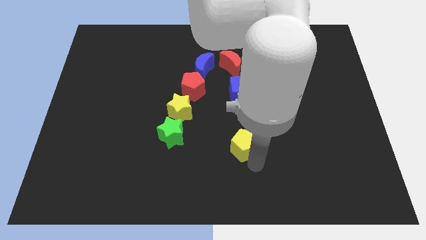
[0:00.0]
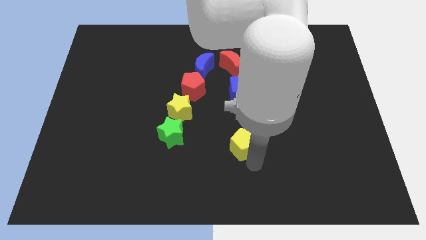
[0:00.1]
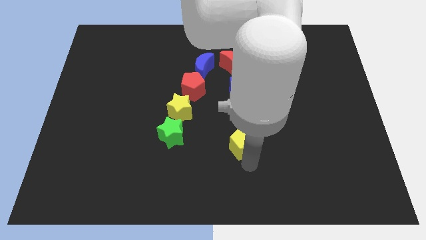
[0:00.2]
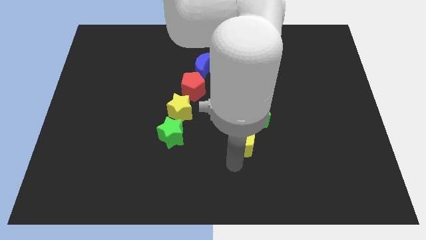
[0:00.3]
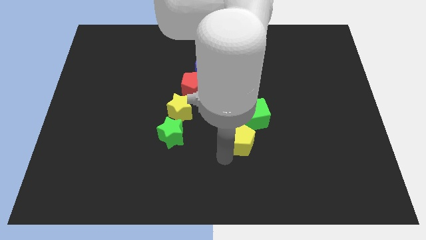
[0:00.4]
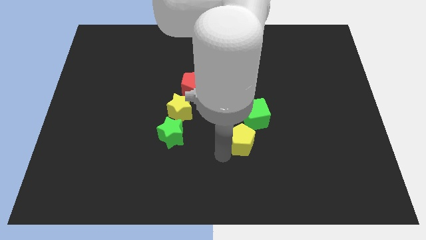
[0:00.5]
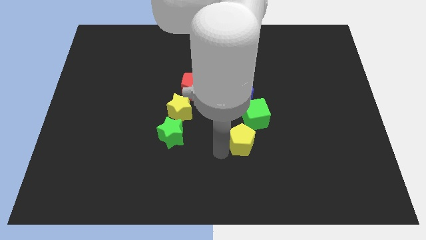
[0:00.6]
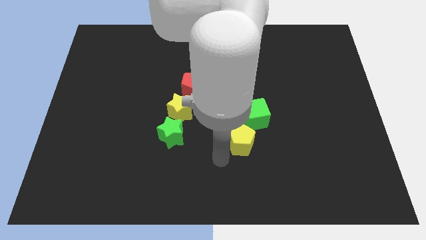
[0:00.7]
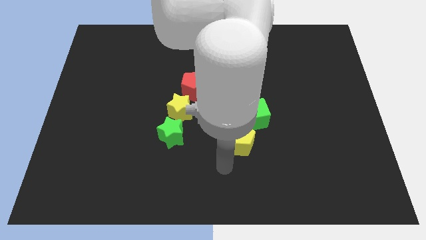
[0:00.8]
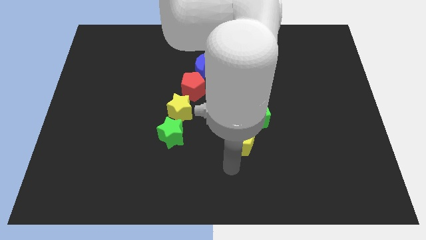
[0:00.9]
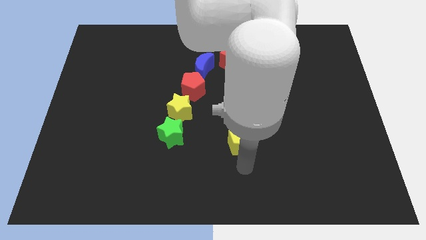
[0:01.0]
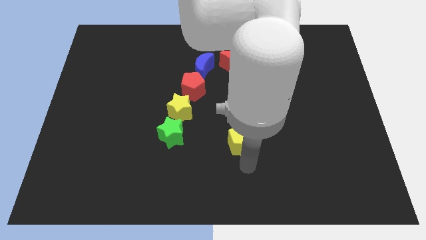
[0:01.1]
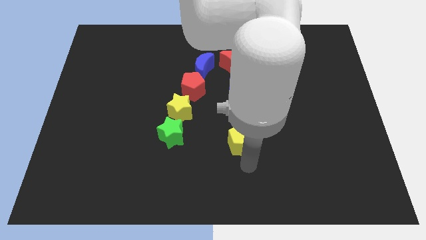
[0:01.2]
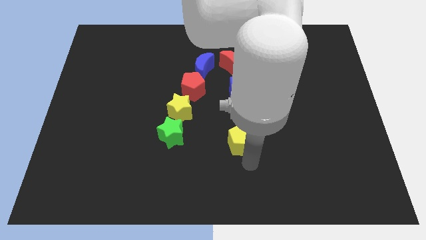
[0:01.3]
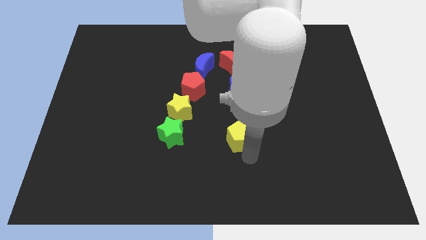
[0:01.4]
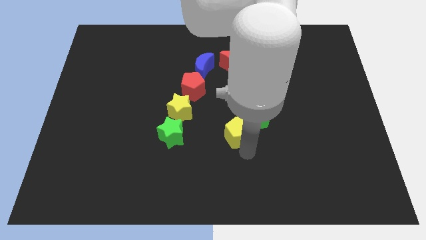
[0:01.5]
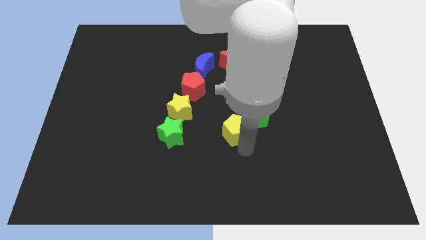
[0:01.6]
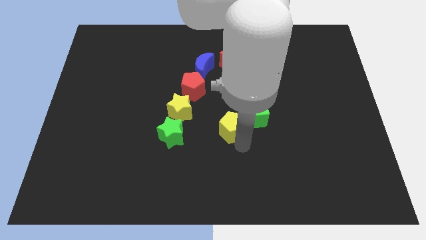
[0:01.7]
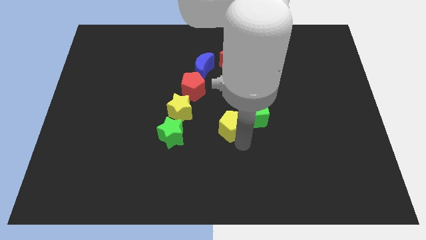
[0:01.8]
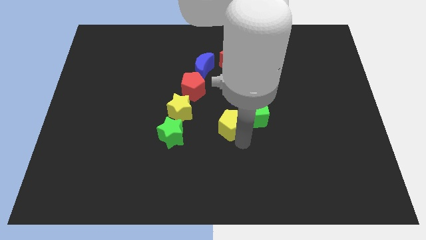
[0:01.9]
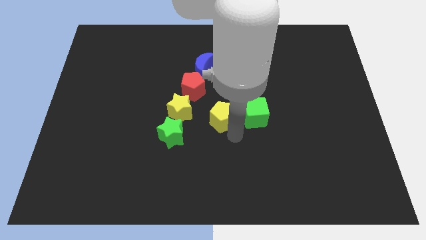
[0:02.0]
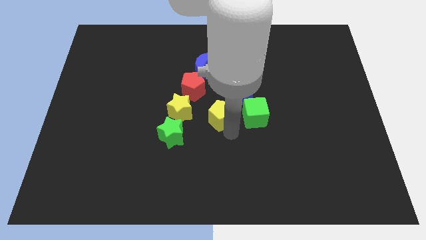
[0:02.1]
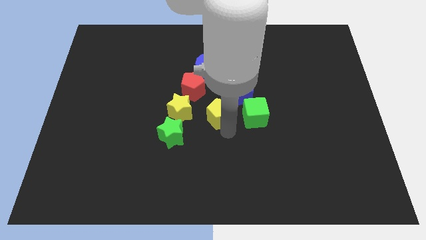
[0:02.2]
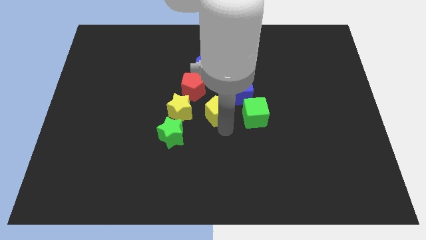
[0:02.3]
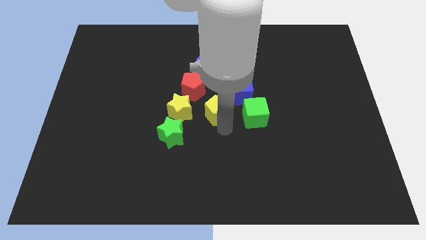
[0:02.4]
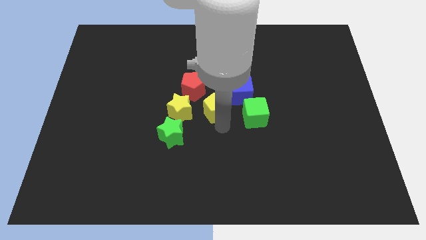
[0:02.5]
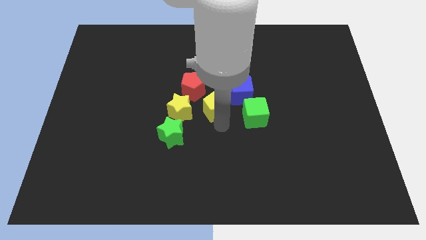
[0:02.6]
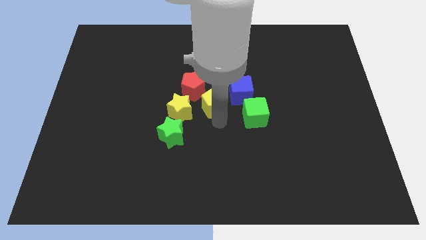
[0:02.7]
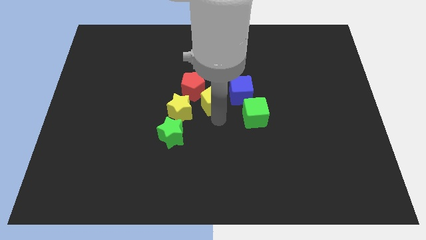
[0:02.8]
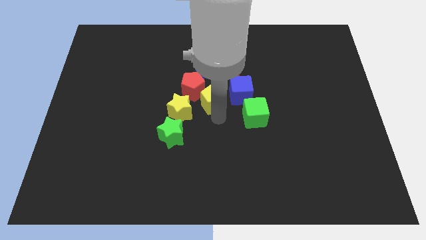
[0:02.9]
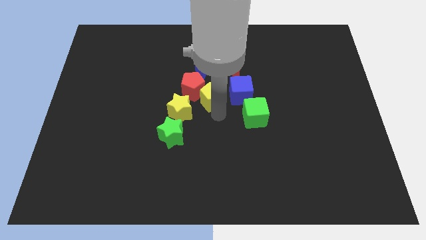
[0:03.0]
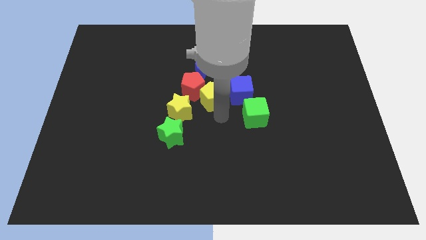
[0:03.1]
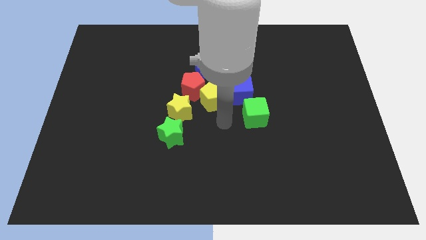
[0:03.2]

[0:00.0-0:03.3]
push the yellow pentagon close to the bottom side of the red pentagon

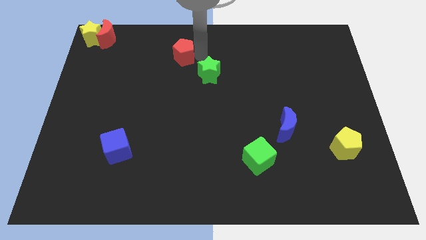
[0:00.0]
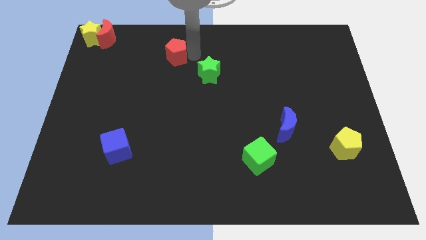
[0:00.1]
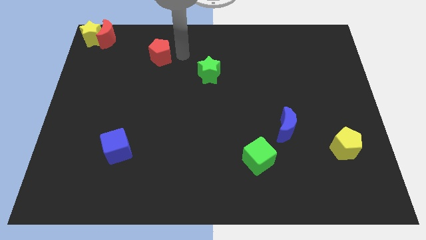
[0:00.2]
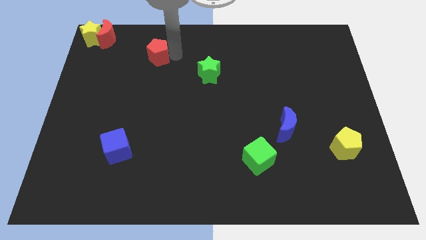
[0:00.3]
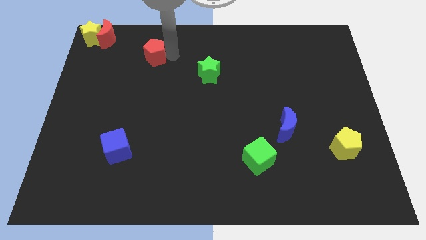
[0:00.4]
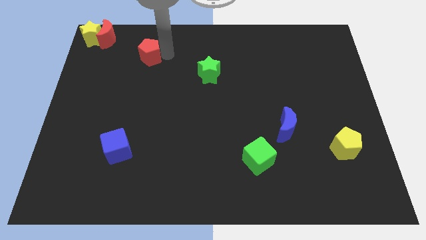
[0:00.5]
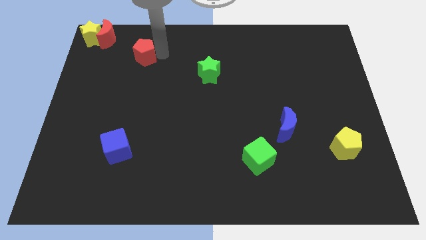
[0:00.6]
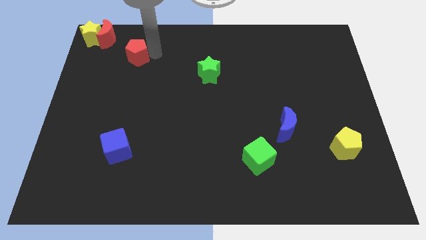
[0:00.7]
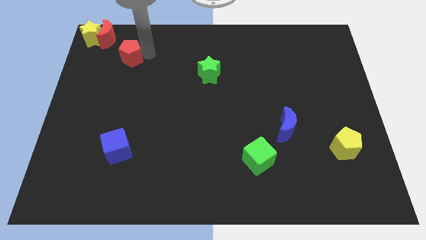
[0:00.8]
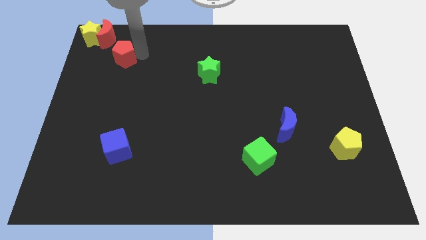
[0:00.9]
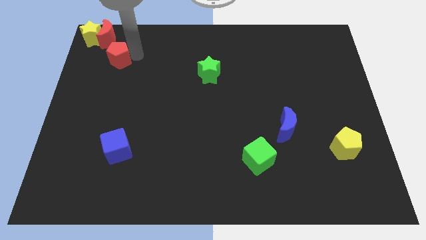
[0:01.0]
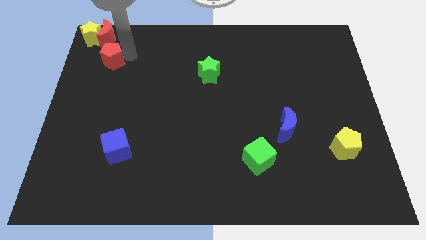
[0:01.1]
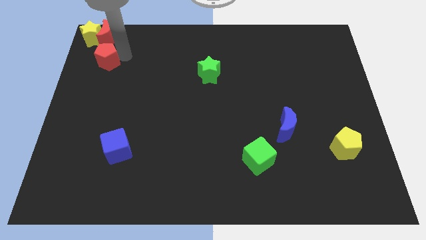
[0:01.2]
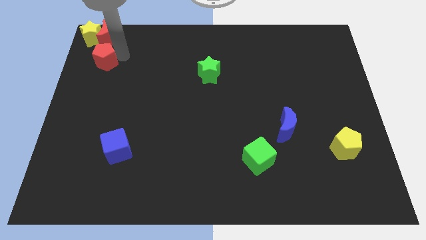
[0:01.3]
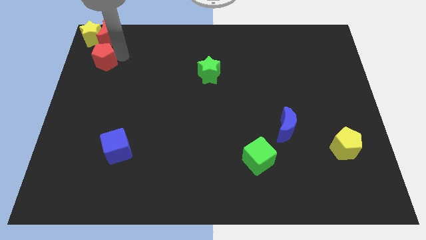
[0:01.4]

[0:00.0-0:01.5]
place red pentagon to the bottom of red crescent

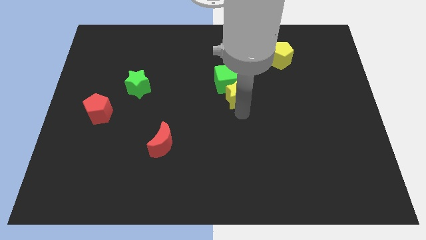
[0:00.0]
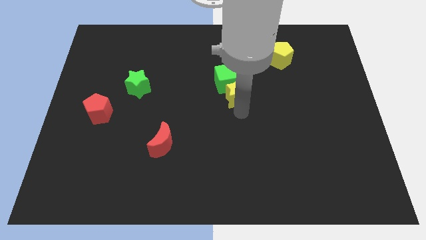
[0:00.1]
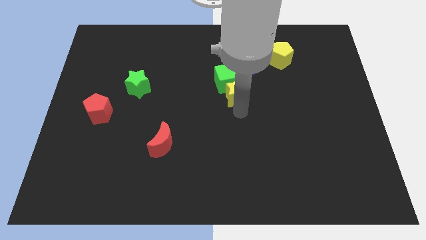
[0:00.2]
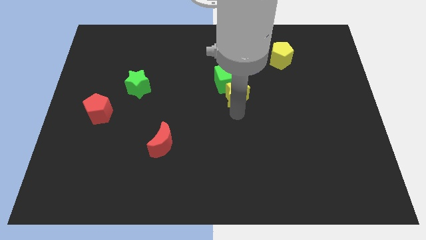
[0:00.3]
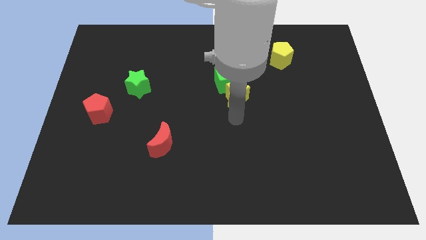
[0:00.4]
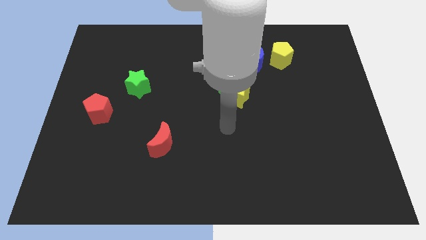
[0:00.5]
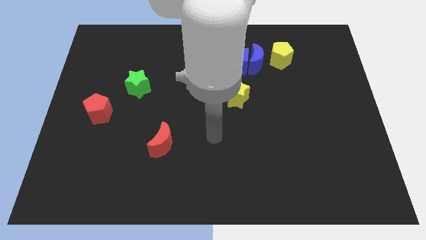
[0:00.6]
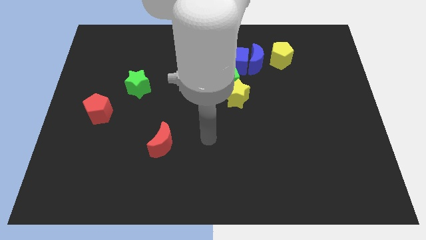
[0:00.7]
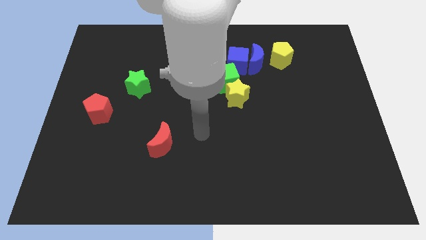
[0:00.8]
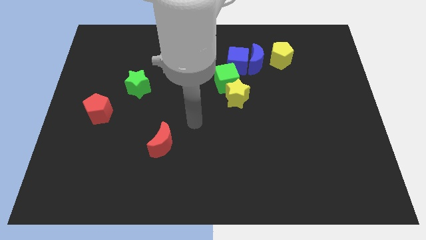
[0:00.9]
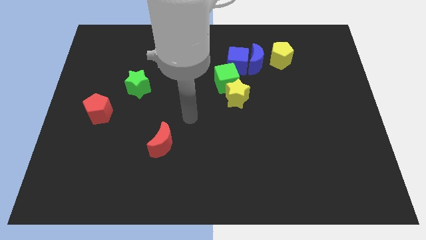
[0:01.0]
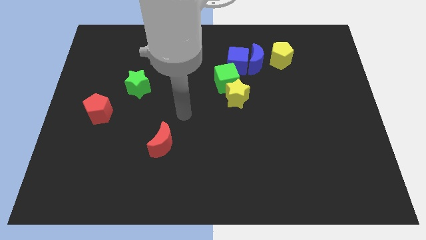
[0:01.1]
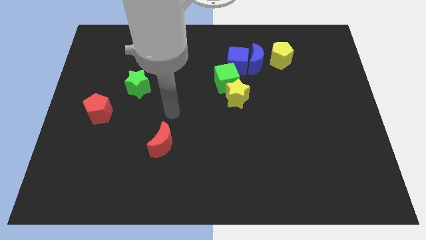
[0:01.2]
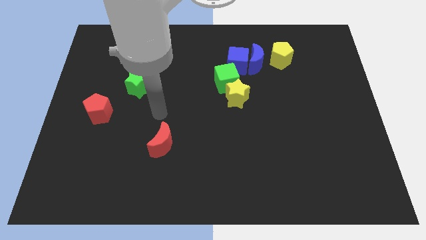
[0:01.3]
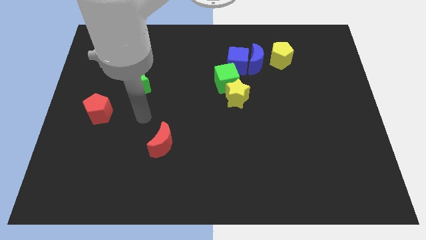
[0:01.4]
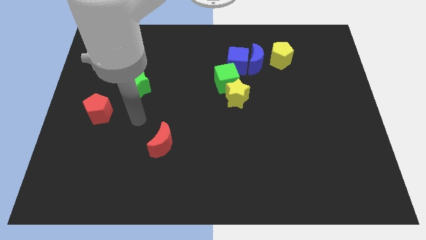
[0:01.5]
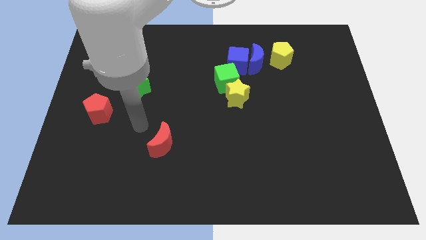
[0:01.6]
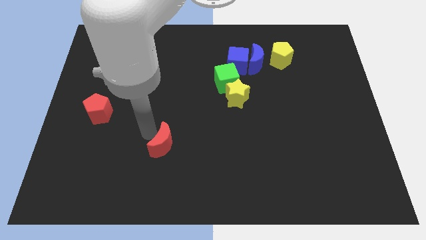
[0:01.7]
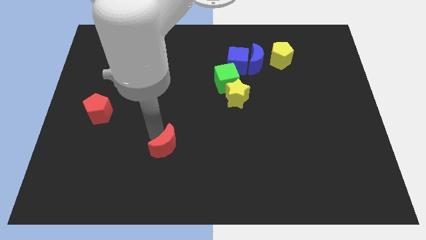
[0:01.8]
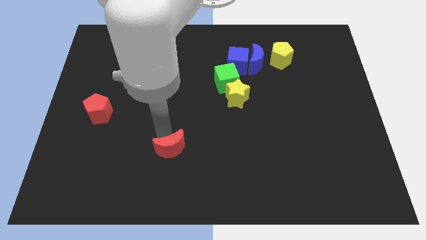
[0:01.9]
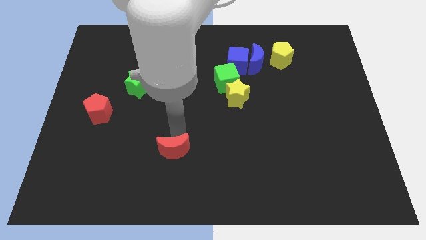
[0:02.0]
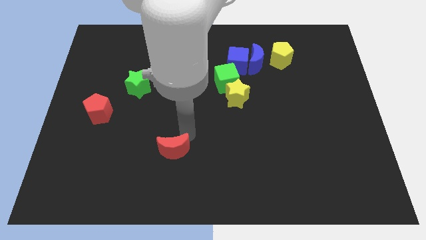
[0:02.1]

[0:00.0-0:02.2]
push the red moon slightly towards the right

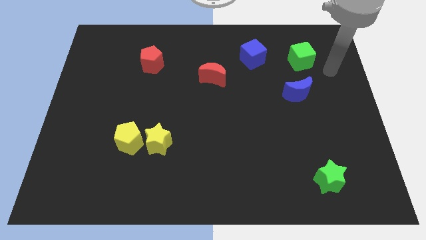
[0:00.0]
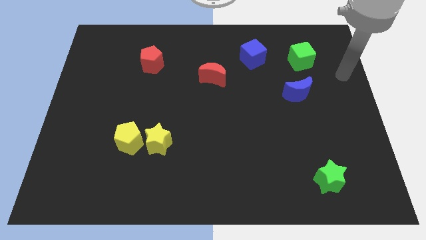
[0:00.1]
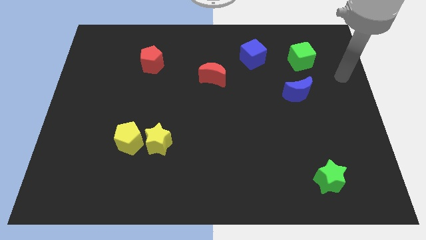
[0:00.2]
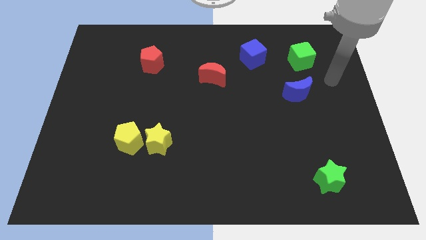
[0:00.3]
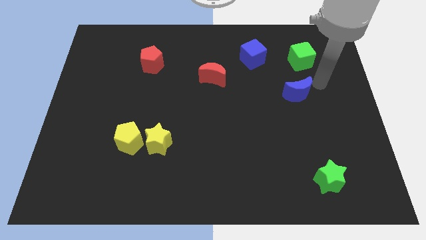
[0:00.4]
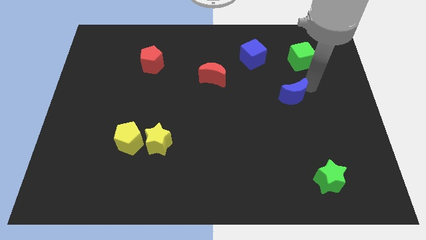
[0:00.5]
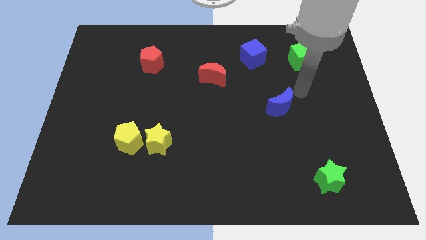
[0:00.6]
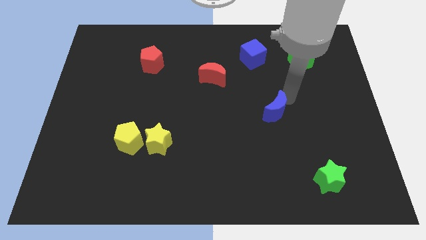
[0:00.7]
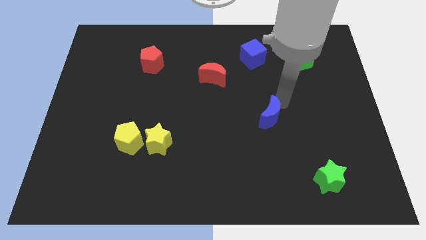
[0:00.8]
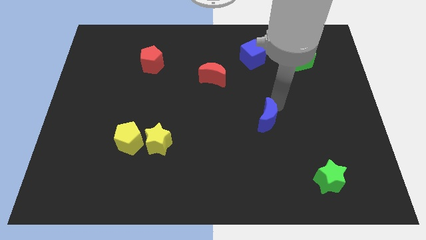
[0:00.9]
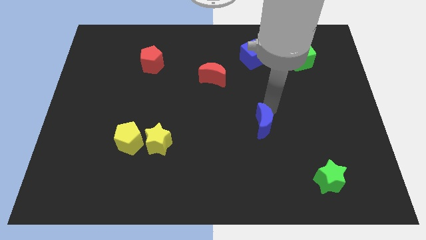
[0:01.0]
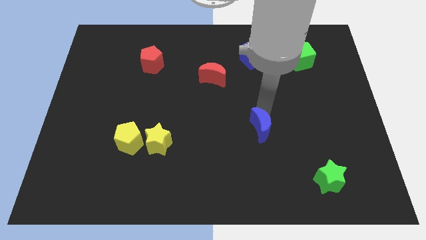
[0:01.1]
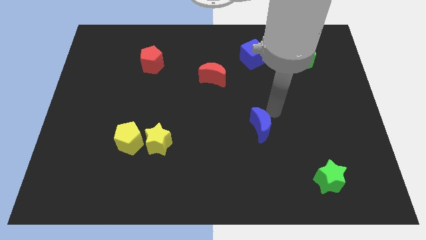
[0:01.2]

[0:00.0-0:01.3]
push the blue crescent to the bottom of the blue cube

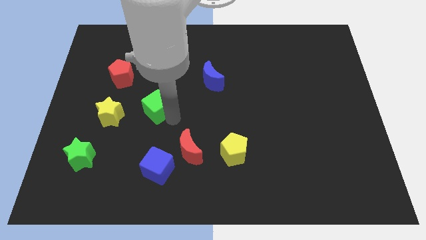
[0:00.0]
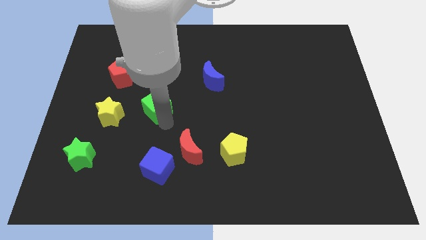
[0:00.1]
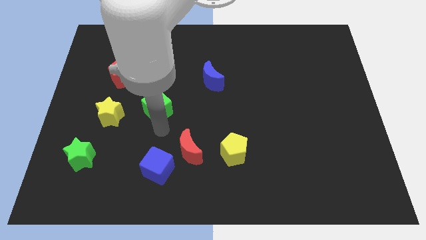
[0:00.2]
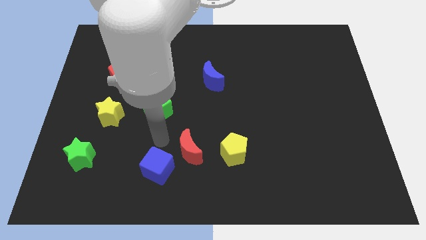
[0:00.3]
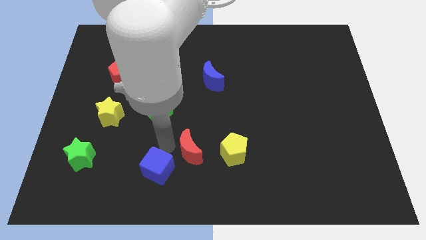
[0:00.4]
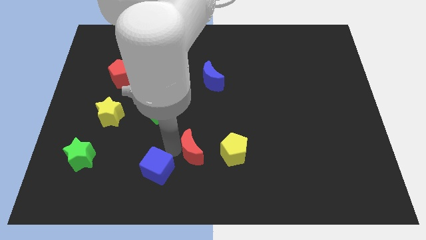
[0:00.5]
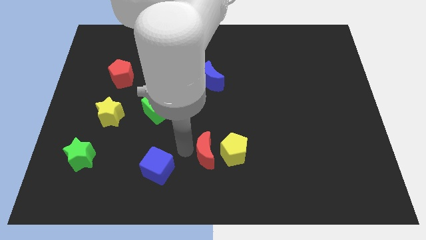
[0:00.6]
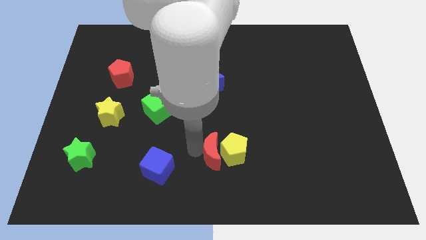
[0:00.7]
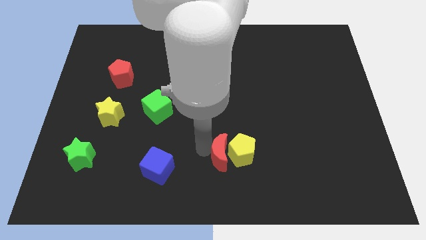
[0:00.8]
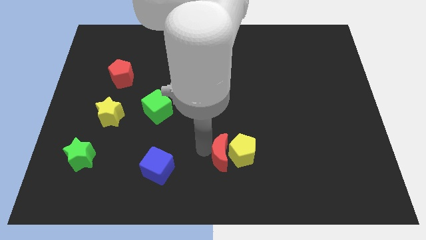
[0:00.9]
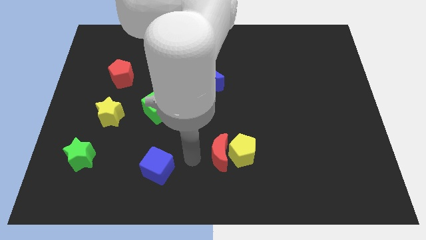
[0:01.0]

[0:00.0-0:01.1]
push the red moon into the yellow pentagon
